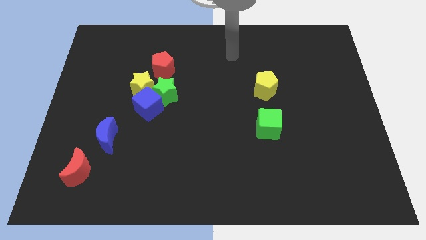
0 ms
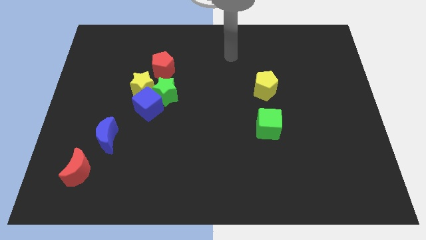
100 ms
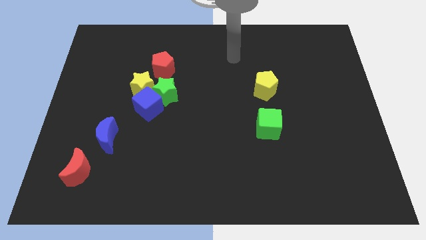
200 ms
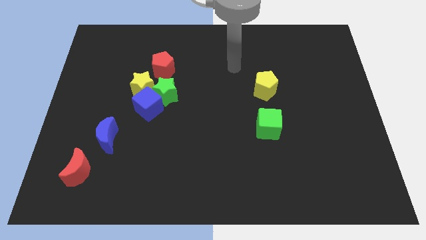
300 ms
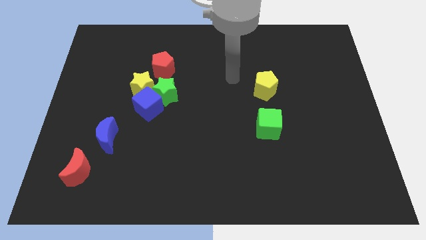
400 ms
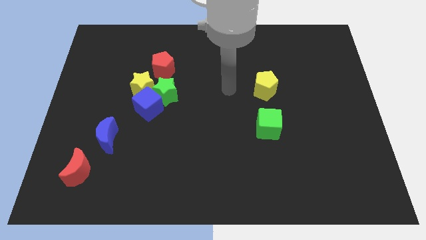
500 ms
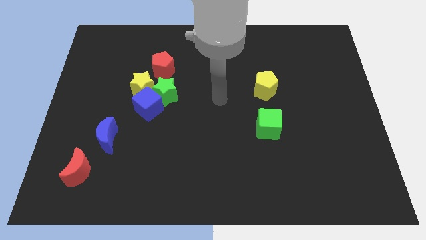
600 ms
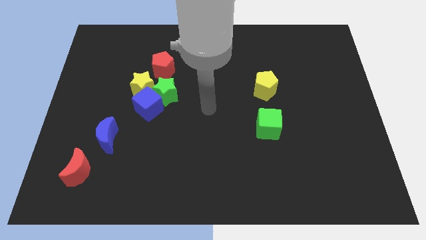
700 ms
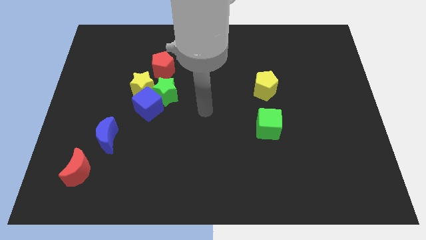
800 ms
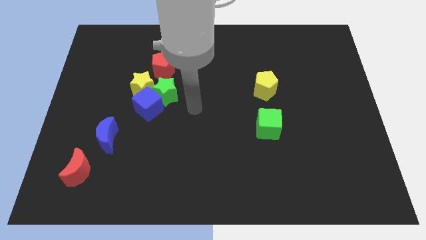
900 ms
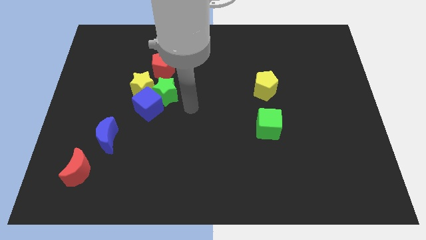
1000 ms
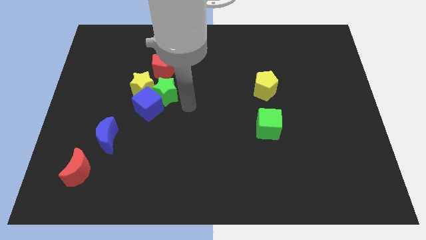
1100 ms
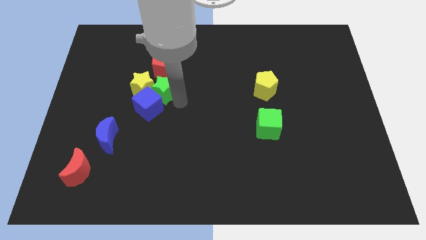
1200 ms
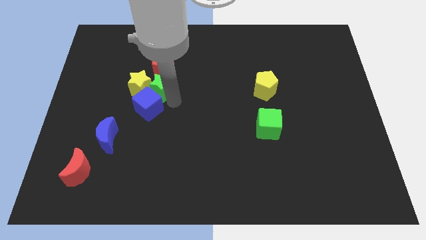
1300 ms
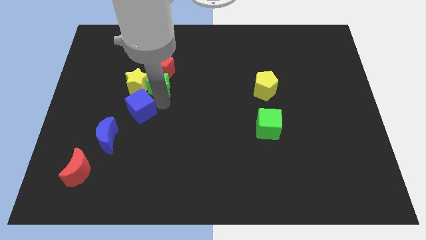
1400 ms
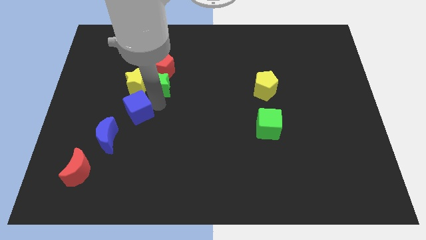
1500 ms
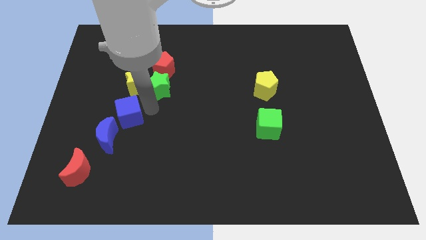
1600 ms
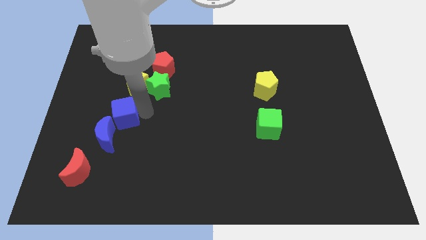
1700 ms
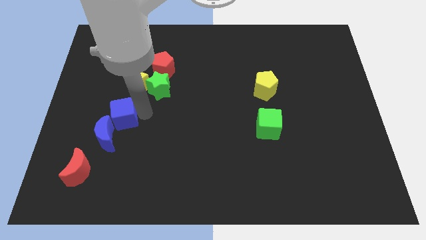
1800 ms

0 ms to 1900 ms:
move the blue cube towards the blue crescent

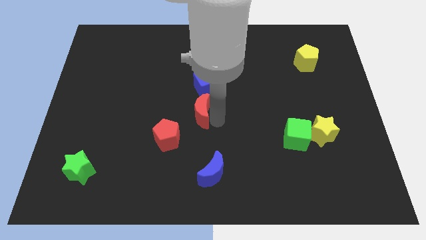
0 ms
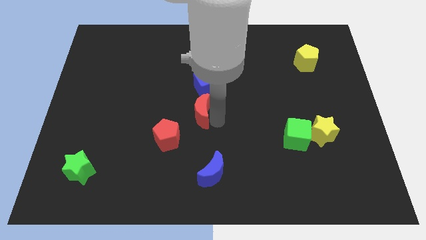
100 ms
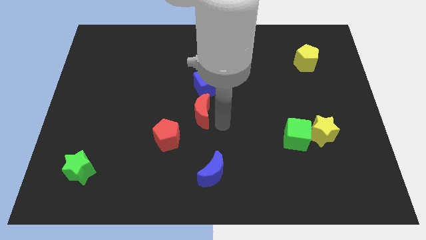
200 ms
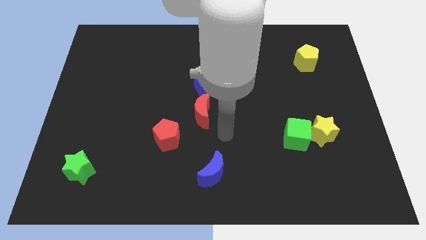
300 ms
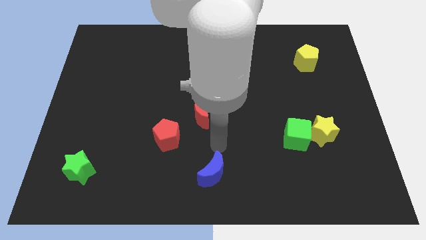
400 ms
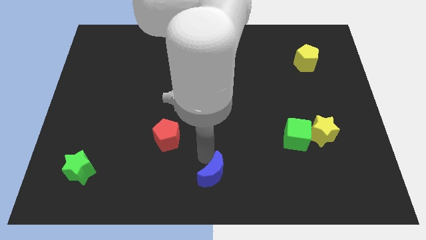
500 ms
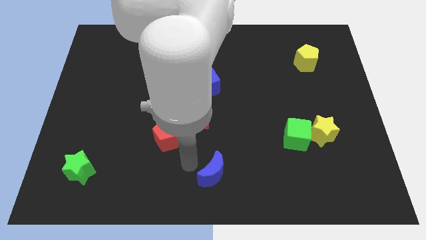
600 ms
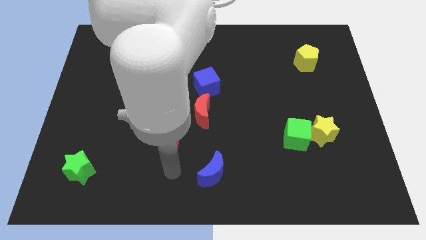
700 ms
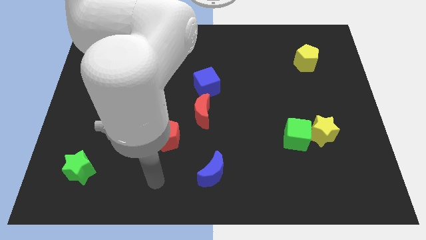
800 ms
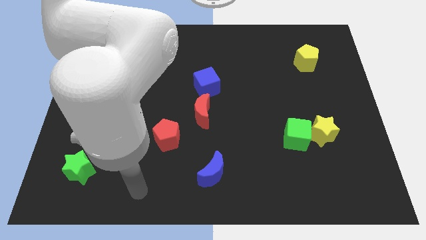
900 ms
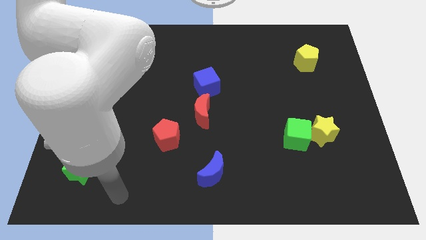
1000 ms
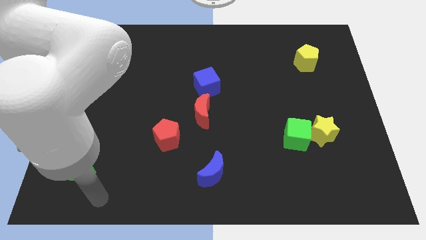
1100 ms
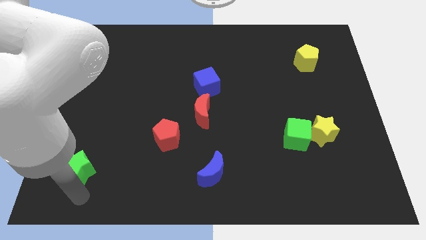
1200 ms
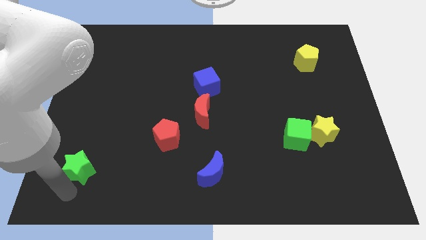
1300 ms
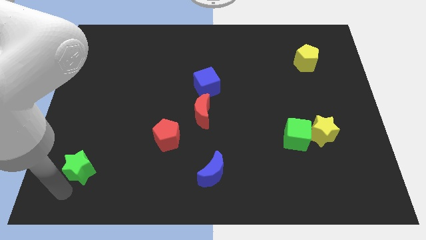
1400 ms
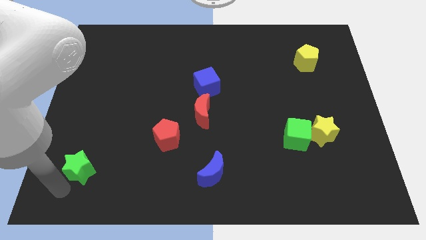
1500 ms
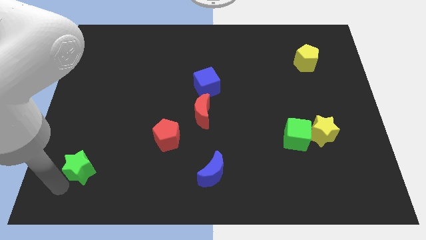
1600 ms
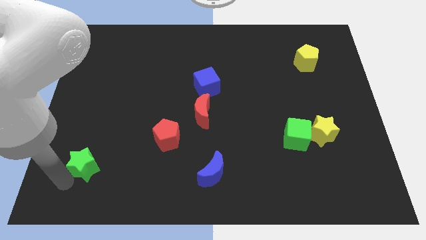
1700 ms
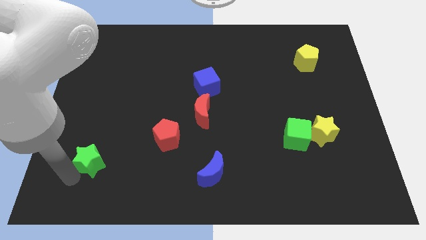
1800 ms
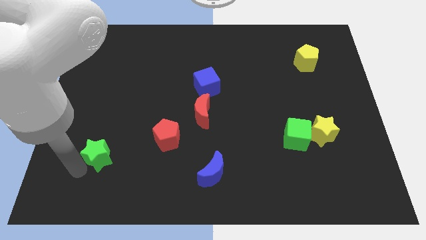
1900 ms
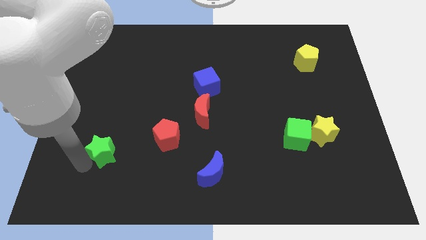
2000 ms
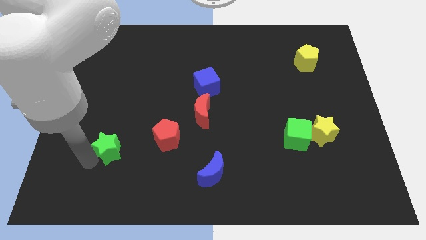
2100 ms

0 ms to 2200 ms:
drag the green star diagonally to blue cube

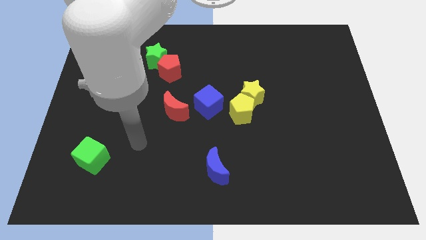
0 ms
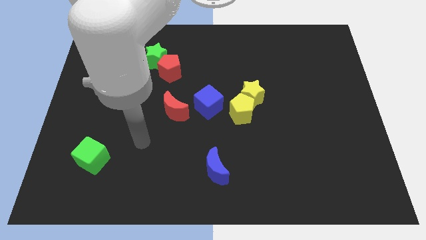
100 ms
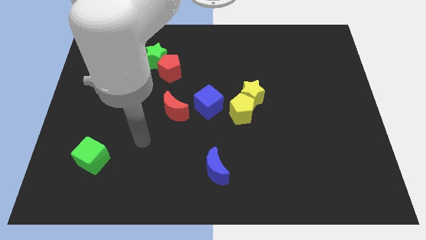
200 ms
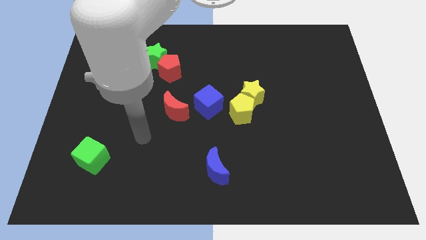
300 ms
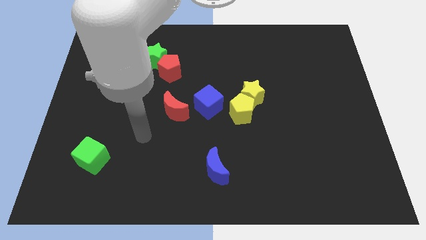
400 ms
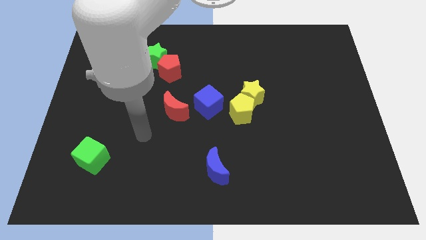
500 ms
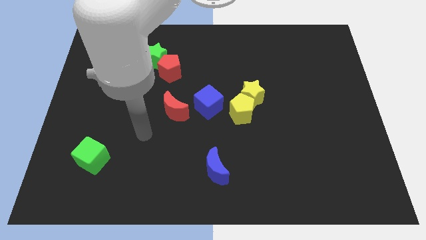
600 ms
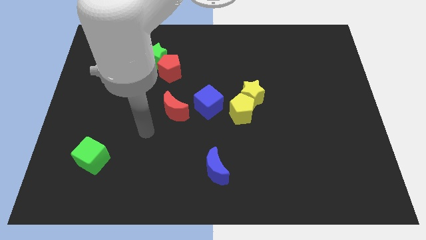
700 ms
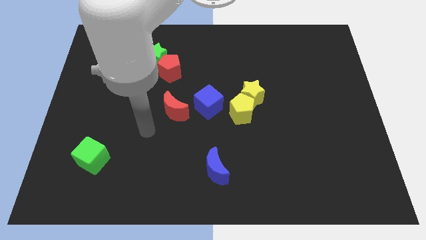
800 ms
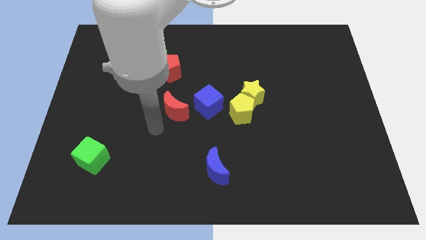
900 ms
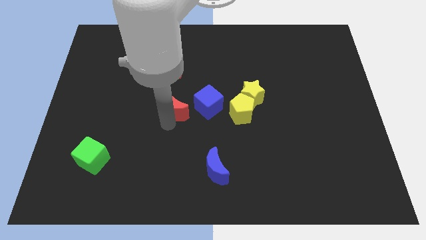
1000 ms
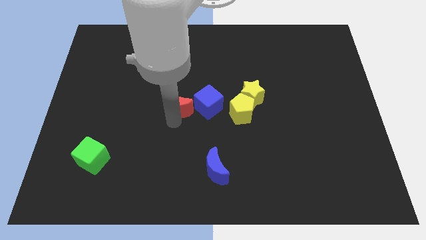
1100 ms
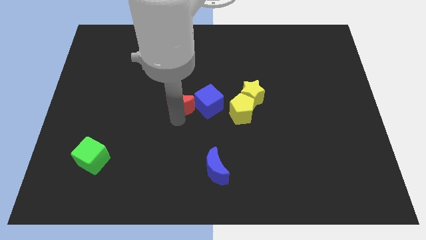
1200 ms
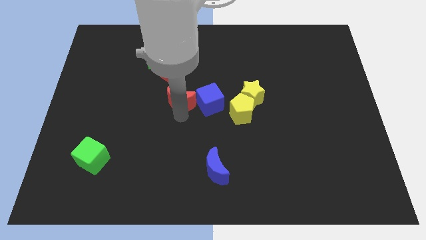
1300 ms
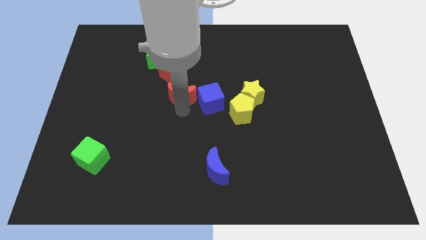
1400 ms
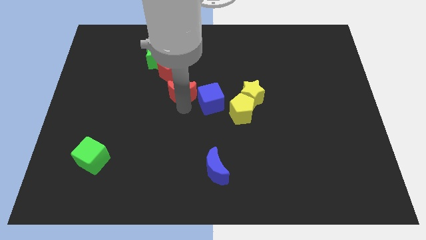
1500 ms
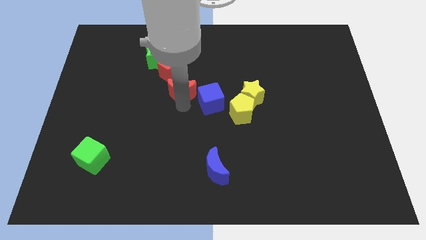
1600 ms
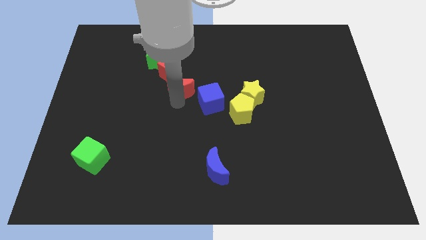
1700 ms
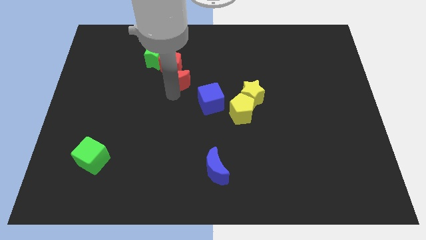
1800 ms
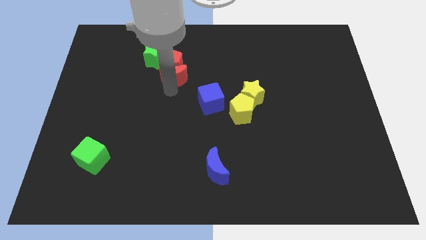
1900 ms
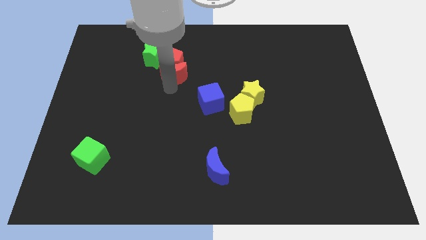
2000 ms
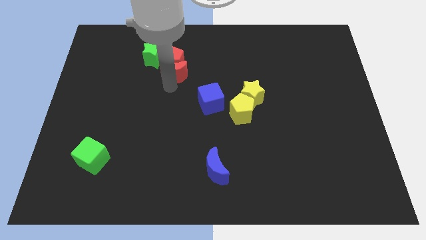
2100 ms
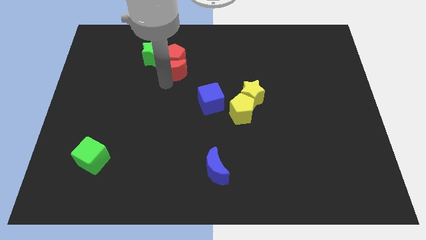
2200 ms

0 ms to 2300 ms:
place the red moon into the red pentagon

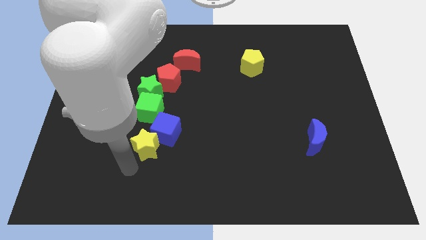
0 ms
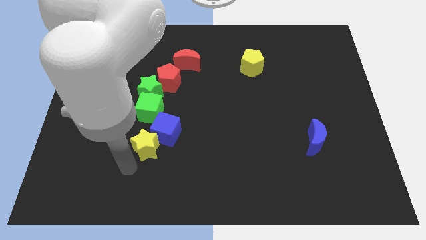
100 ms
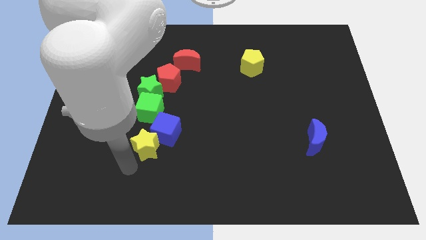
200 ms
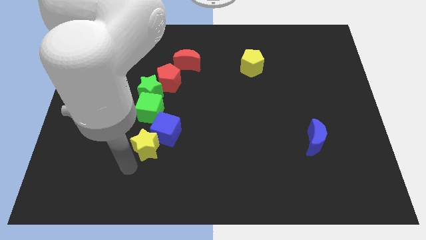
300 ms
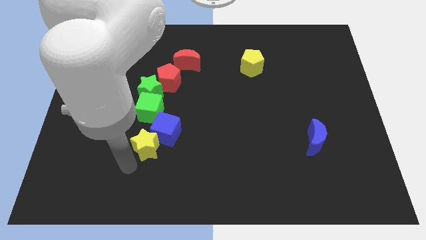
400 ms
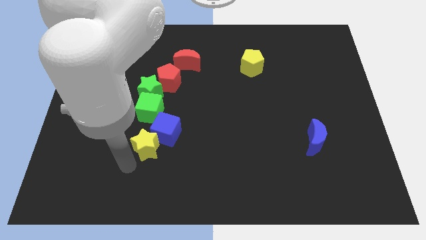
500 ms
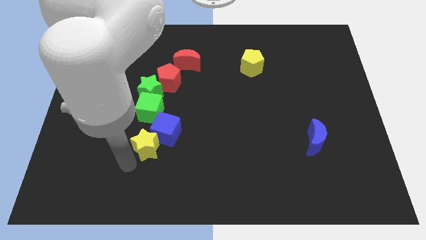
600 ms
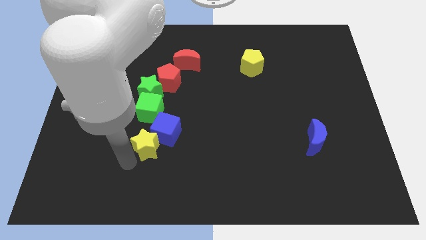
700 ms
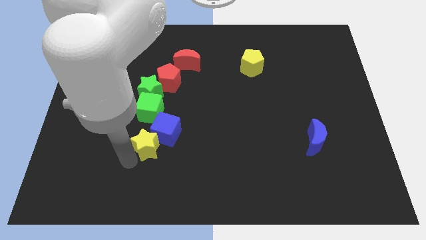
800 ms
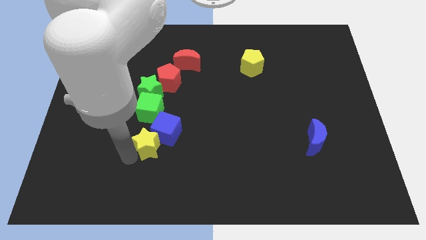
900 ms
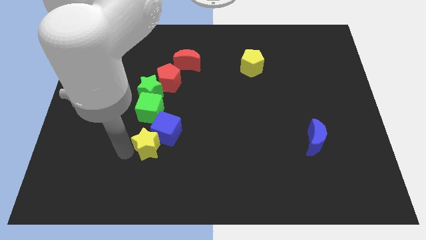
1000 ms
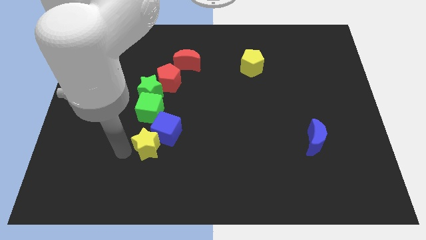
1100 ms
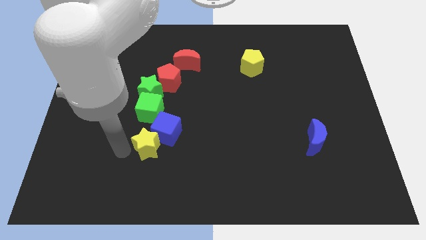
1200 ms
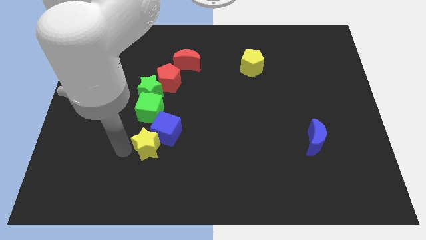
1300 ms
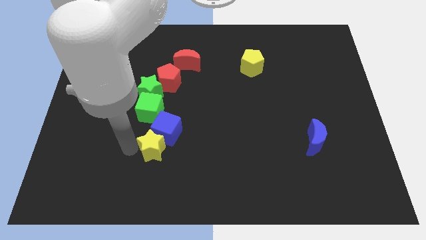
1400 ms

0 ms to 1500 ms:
move the yellow star slightly to the right

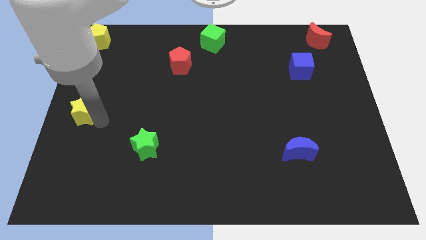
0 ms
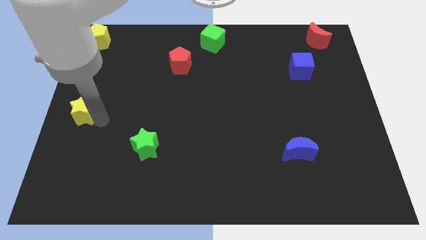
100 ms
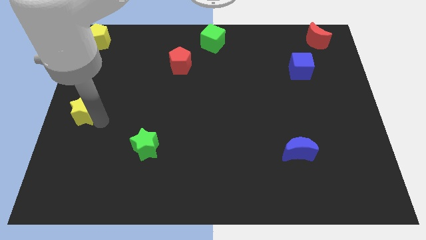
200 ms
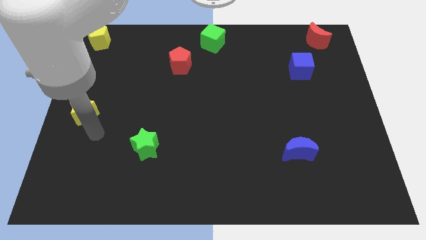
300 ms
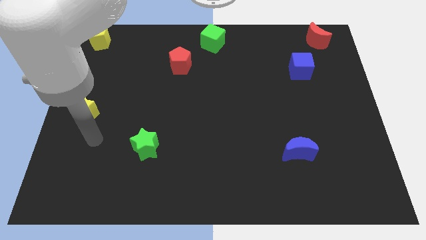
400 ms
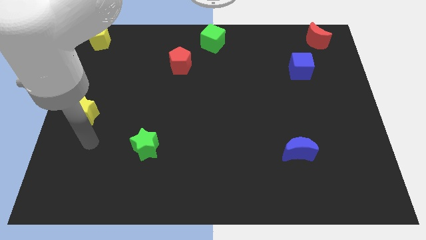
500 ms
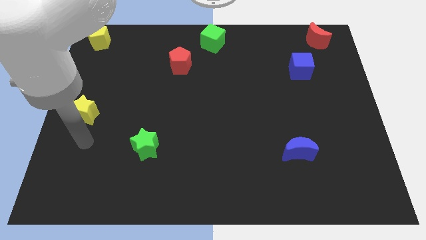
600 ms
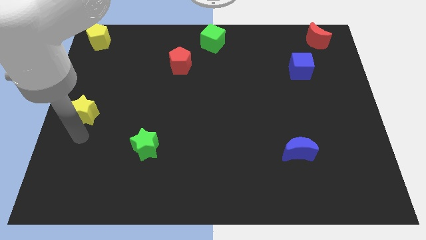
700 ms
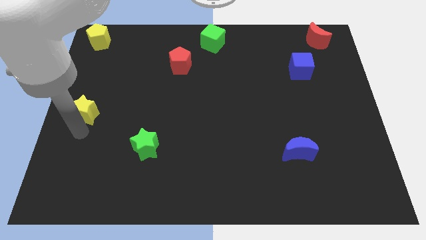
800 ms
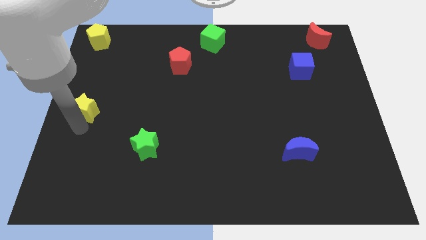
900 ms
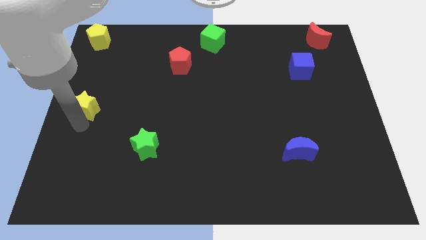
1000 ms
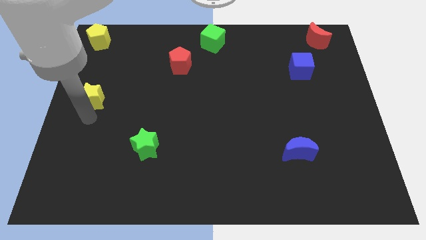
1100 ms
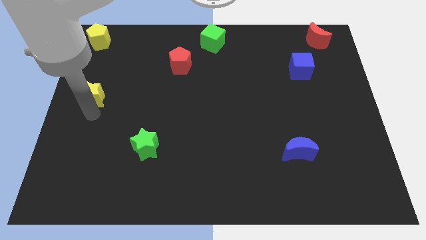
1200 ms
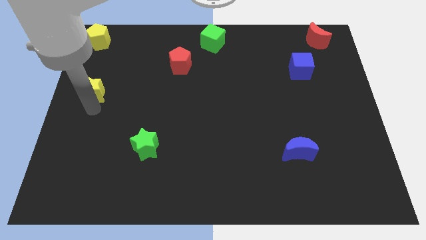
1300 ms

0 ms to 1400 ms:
place the yellow star at left center of the board
